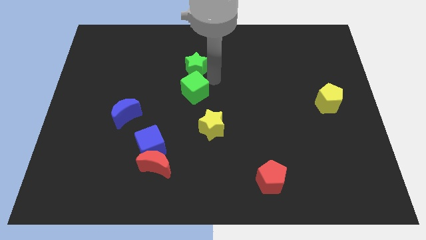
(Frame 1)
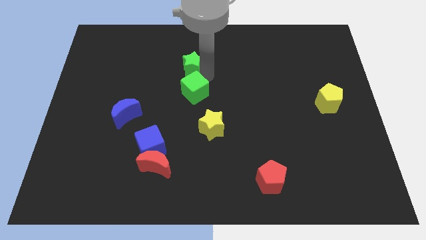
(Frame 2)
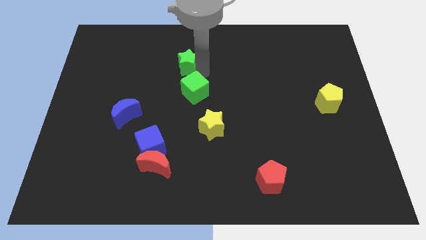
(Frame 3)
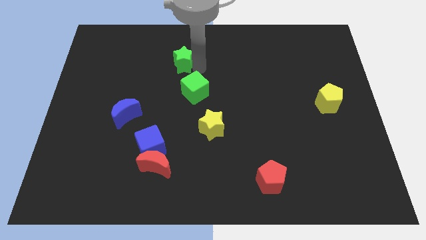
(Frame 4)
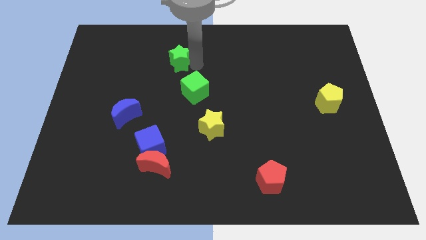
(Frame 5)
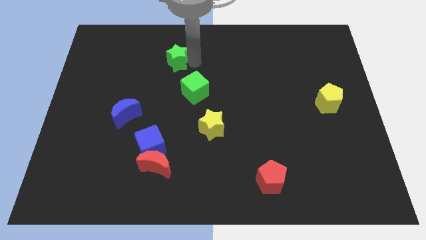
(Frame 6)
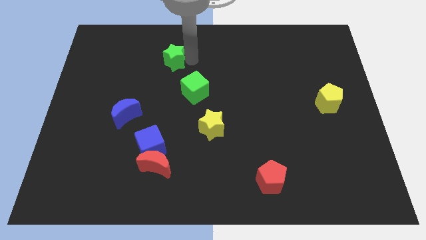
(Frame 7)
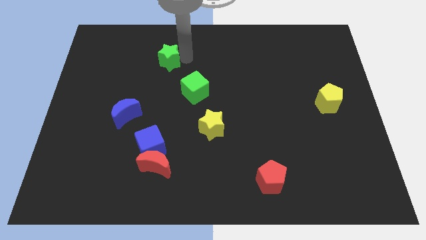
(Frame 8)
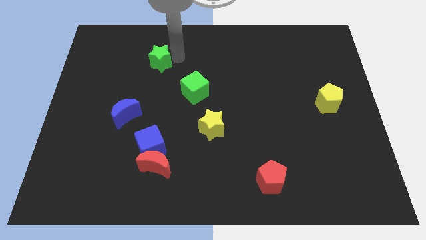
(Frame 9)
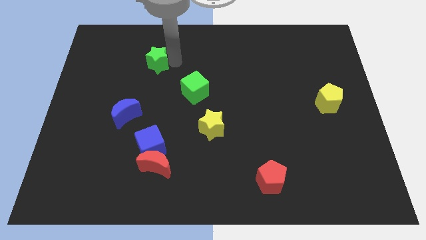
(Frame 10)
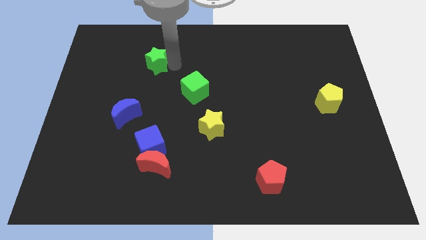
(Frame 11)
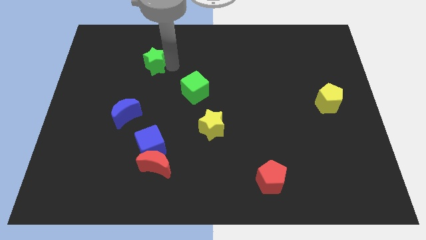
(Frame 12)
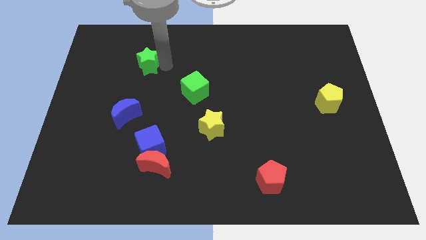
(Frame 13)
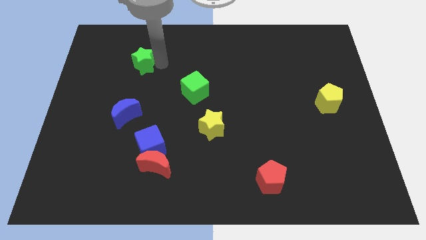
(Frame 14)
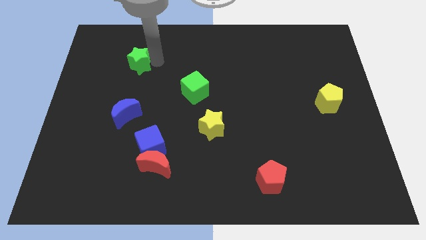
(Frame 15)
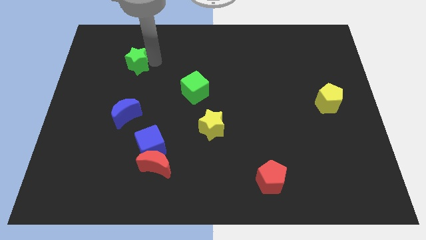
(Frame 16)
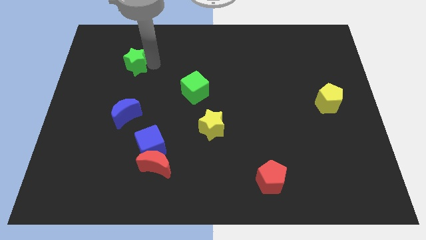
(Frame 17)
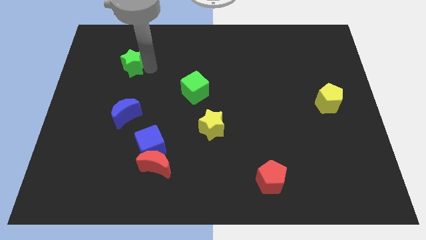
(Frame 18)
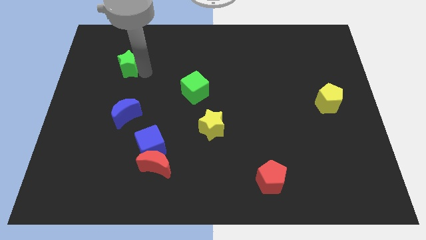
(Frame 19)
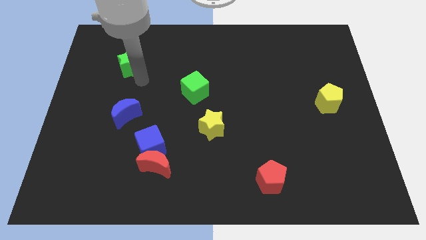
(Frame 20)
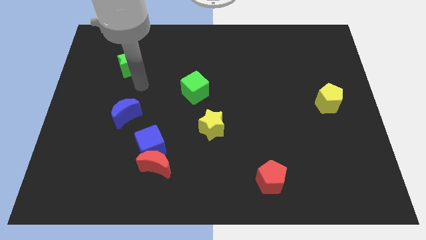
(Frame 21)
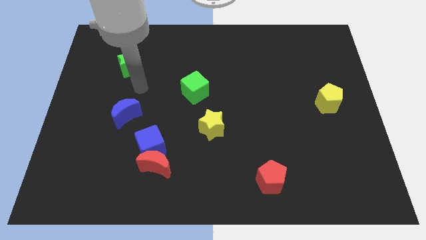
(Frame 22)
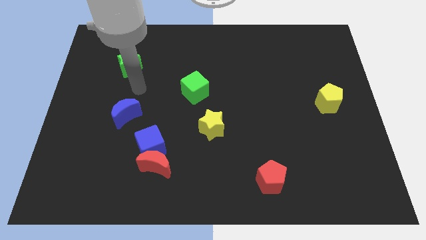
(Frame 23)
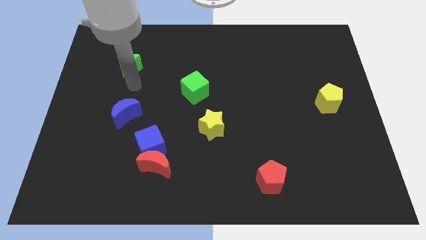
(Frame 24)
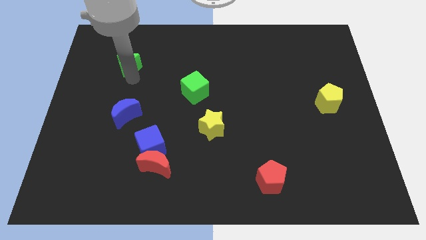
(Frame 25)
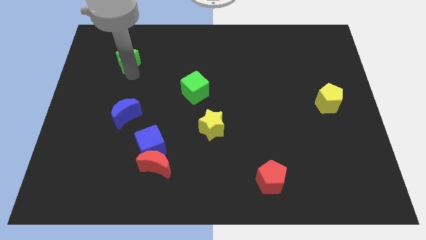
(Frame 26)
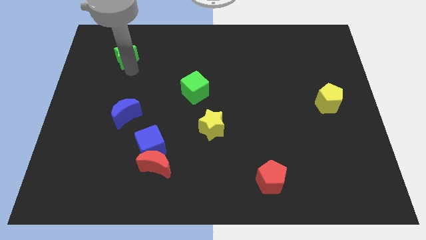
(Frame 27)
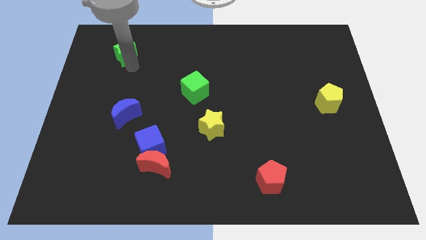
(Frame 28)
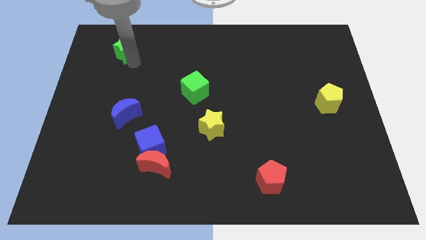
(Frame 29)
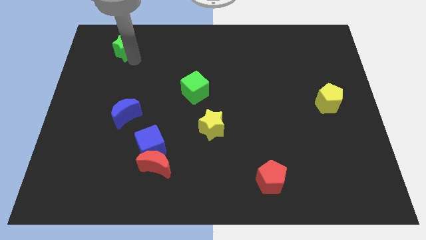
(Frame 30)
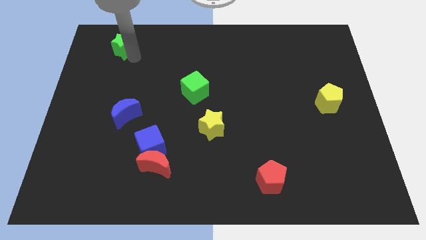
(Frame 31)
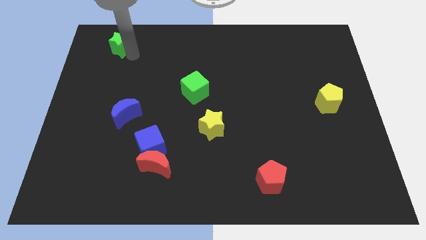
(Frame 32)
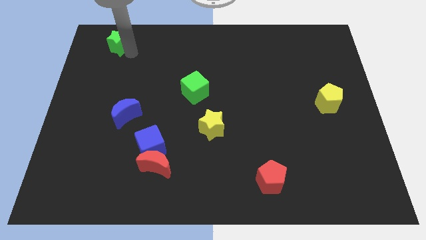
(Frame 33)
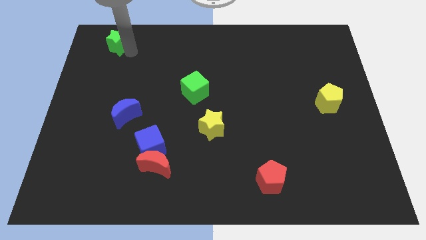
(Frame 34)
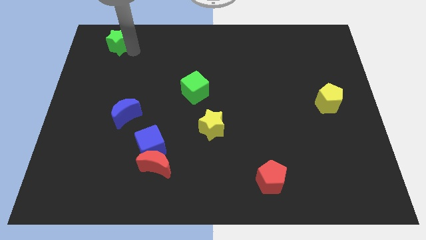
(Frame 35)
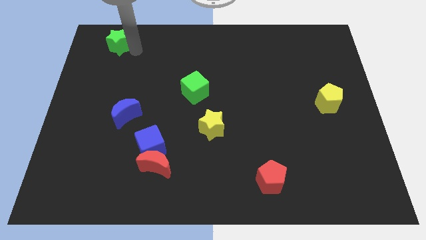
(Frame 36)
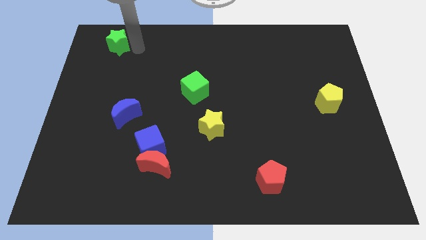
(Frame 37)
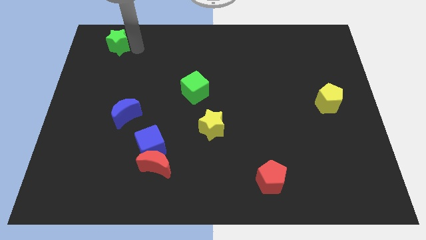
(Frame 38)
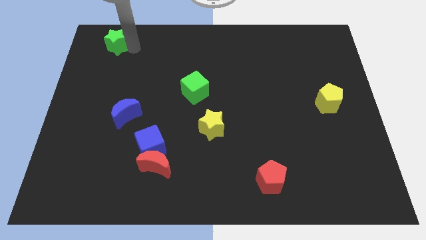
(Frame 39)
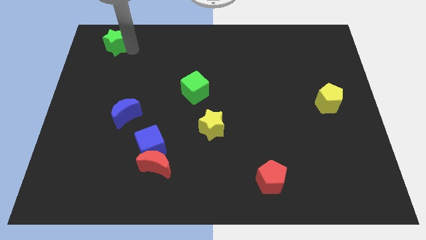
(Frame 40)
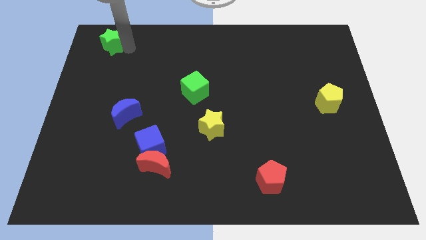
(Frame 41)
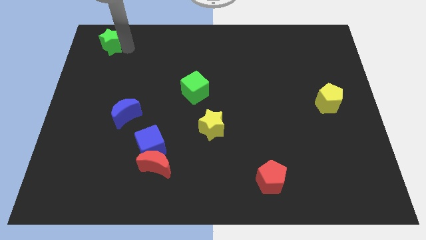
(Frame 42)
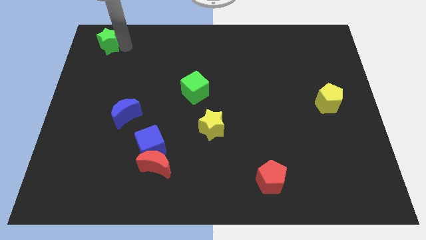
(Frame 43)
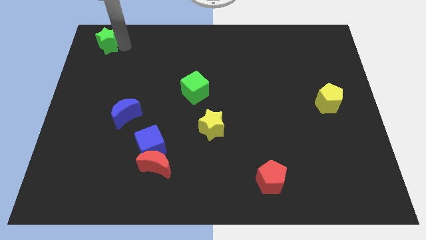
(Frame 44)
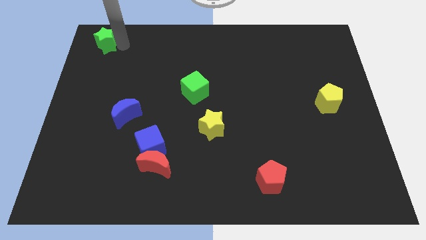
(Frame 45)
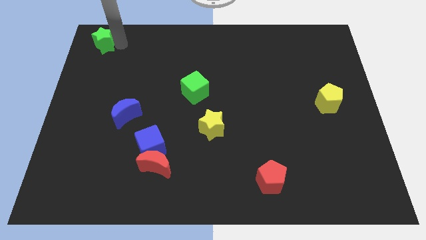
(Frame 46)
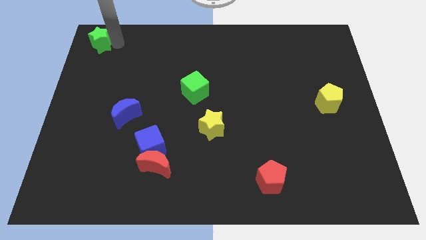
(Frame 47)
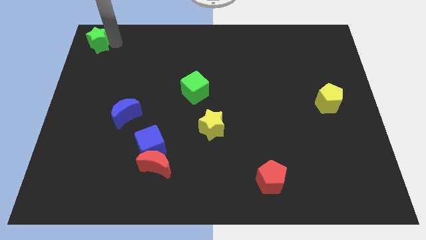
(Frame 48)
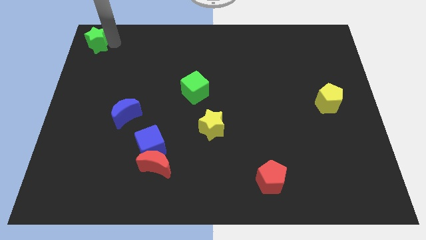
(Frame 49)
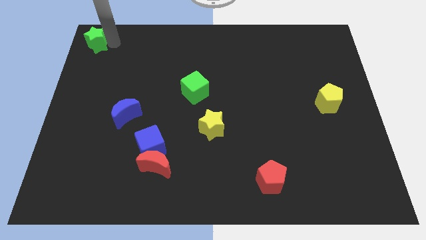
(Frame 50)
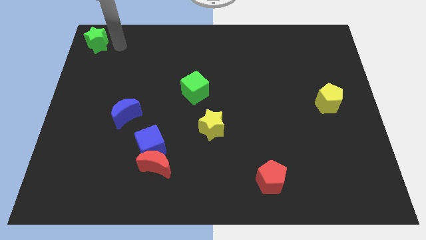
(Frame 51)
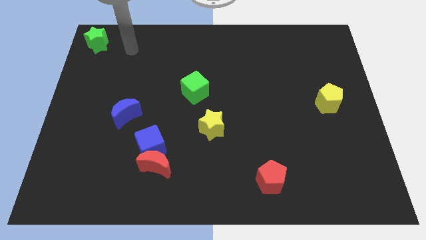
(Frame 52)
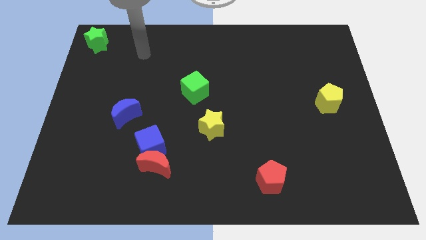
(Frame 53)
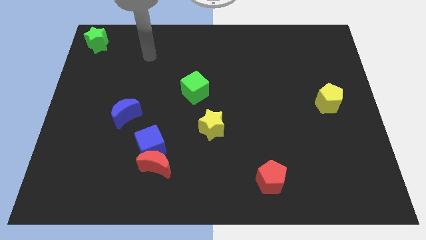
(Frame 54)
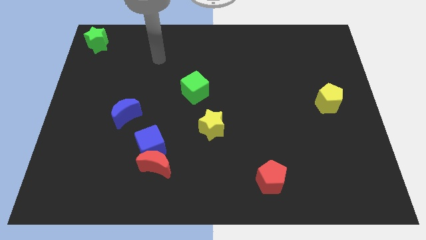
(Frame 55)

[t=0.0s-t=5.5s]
place the green star at the top left corner of the board

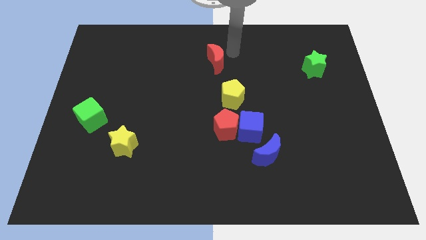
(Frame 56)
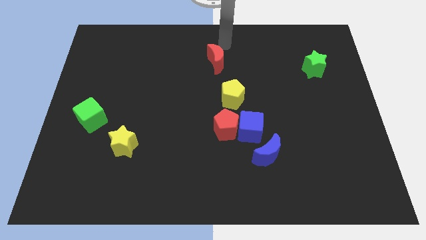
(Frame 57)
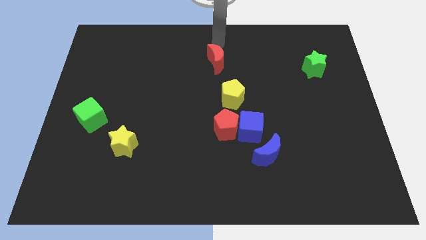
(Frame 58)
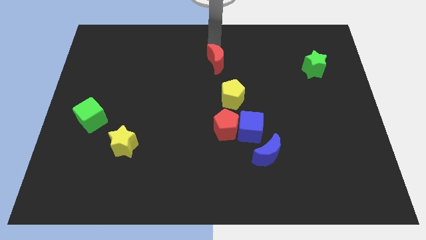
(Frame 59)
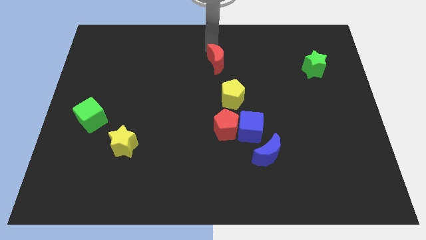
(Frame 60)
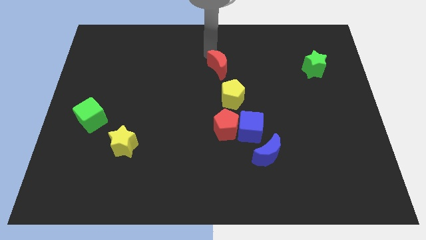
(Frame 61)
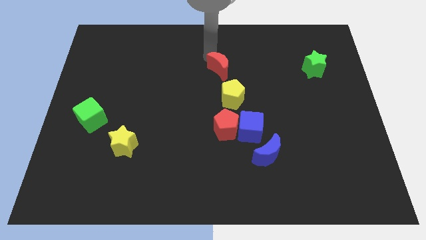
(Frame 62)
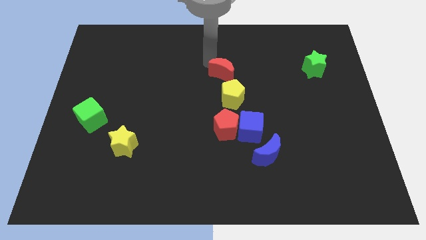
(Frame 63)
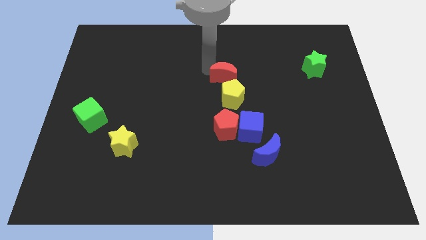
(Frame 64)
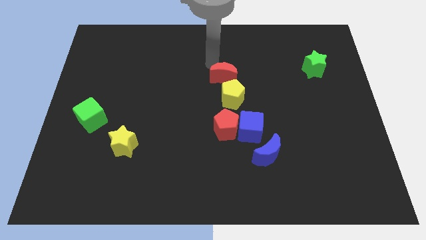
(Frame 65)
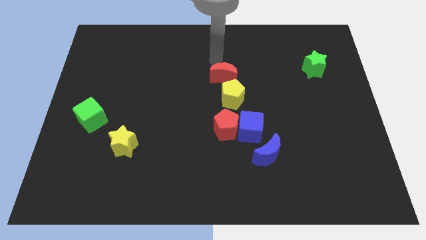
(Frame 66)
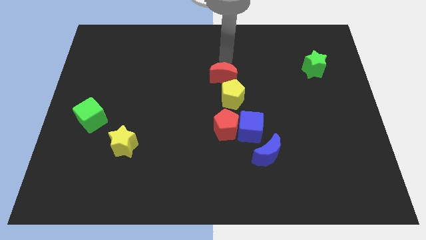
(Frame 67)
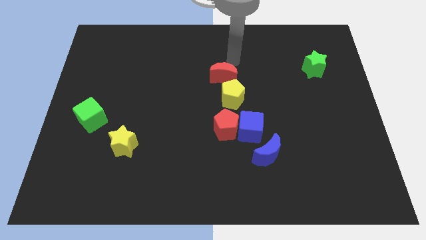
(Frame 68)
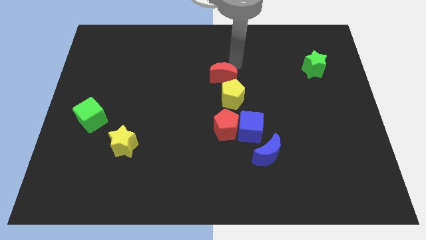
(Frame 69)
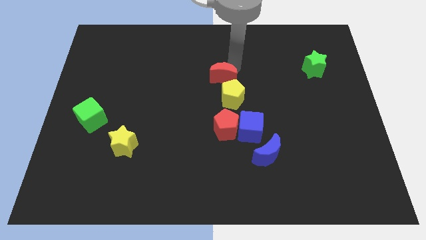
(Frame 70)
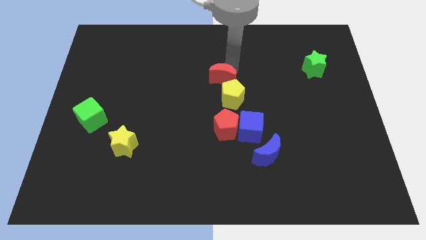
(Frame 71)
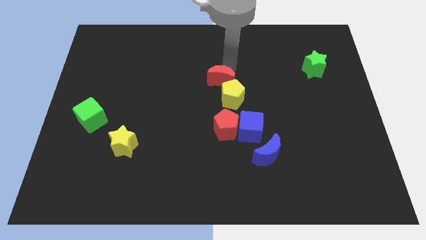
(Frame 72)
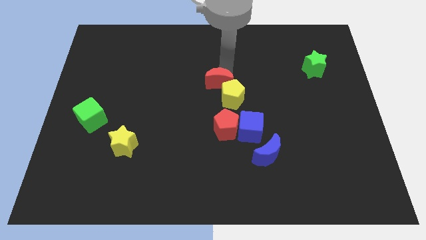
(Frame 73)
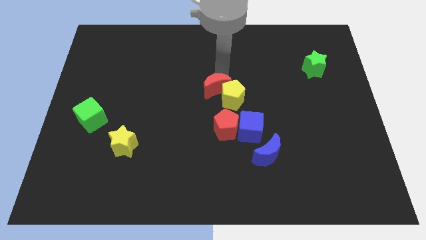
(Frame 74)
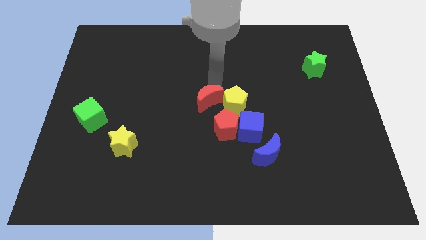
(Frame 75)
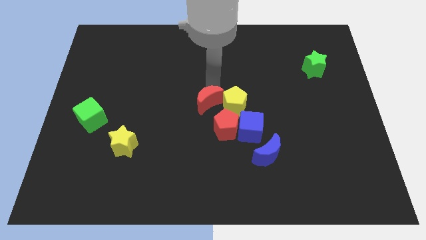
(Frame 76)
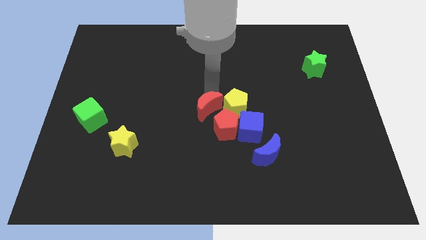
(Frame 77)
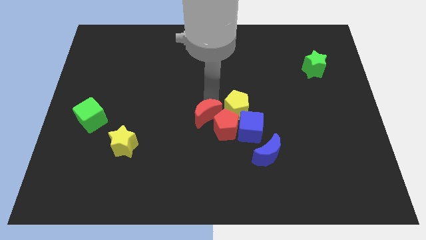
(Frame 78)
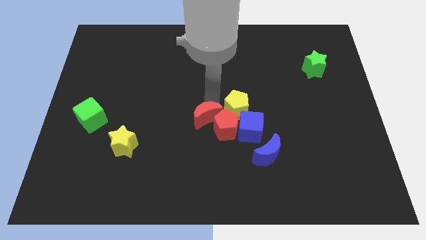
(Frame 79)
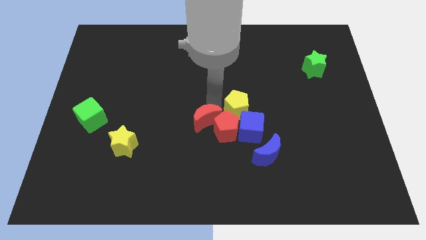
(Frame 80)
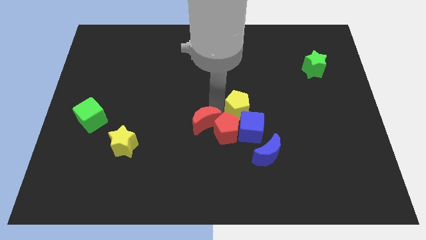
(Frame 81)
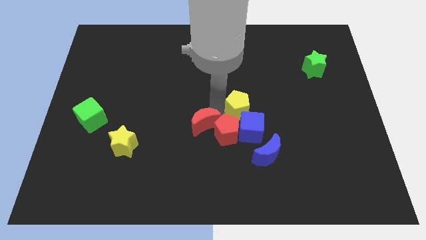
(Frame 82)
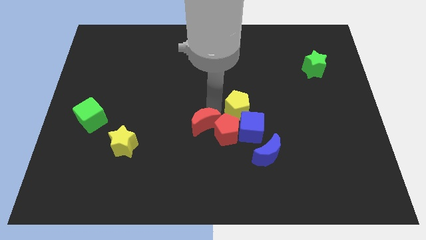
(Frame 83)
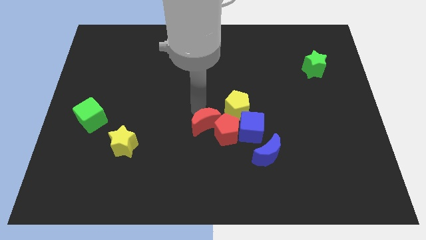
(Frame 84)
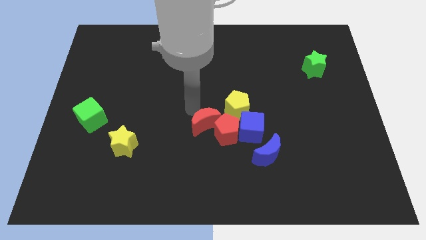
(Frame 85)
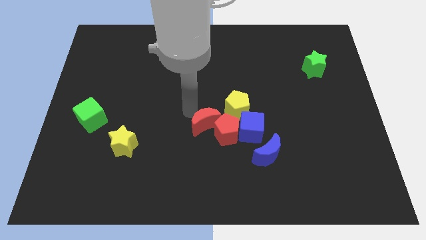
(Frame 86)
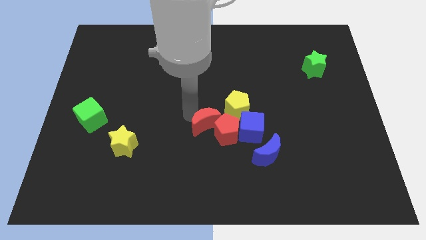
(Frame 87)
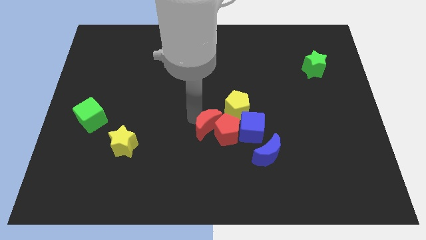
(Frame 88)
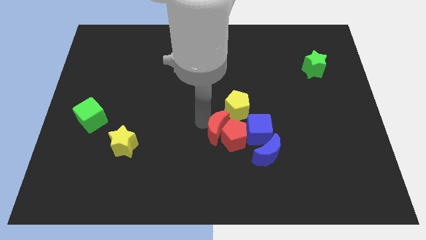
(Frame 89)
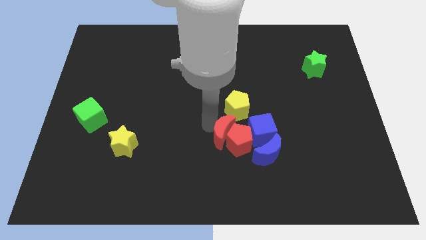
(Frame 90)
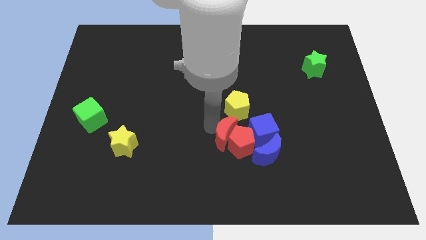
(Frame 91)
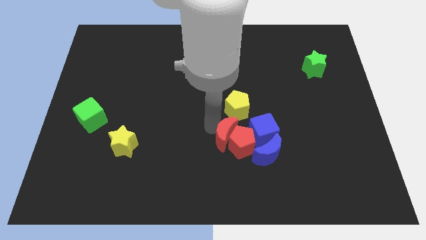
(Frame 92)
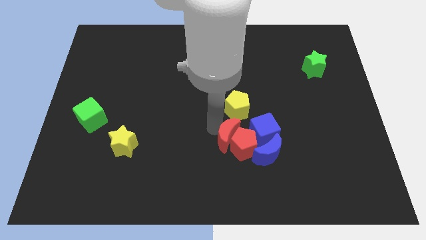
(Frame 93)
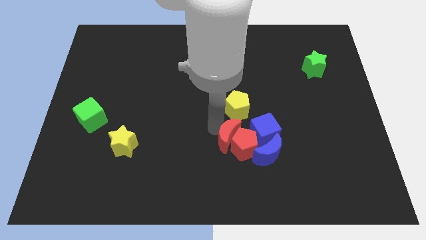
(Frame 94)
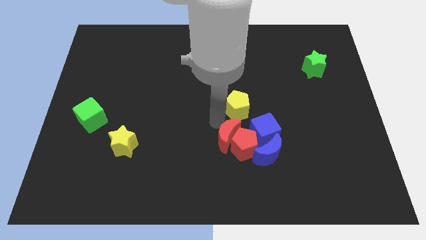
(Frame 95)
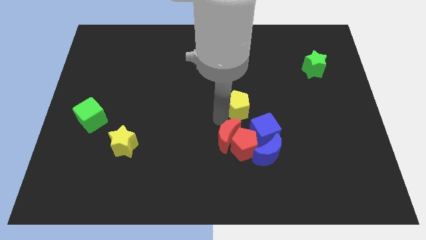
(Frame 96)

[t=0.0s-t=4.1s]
push the red moon into red pentagon
